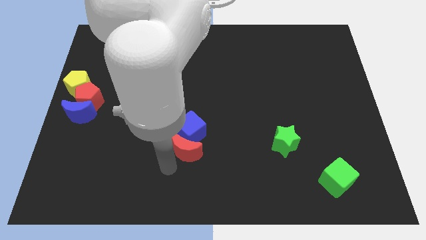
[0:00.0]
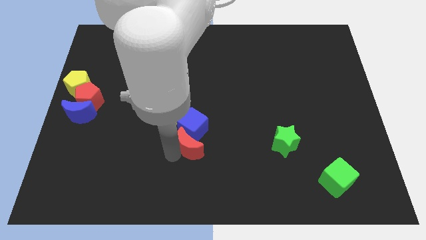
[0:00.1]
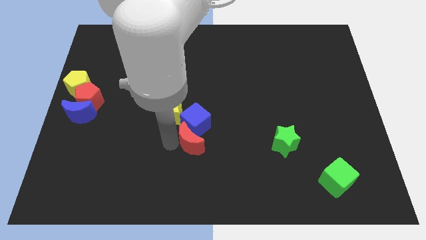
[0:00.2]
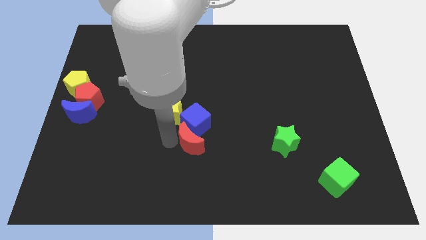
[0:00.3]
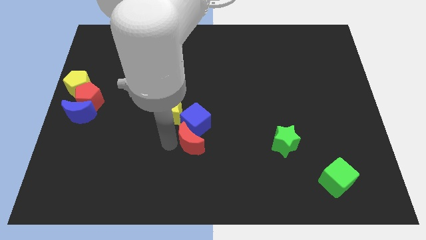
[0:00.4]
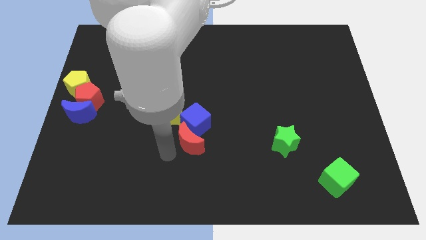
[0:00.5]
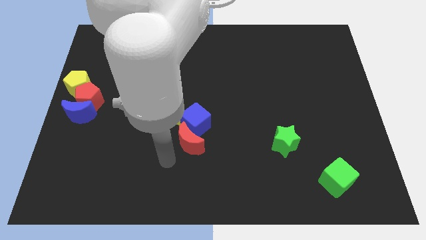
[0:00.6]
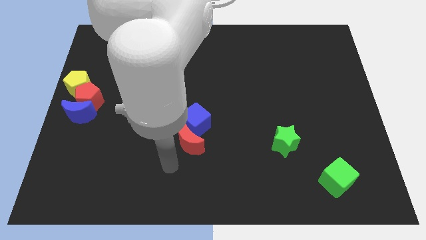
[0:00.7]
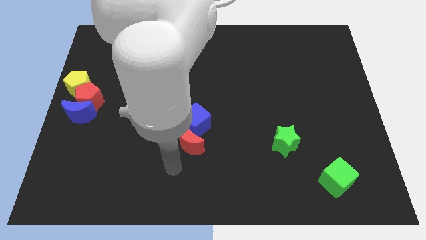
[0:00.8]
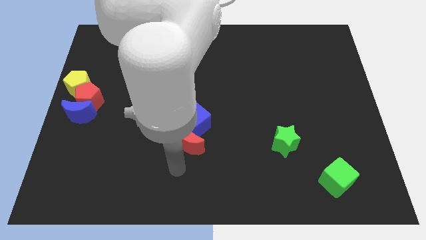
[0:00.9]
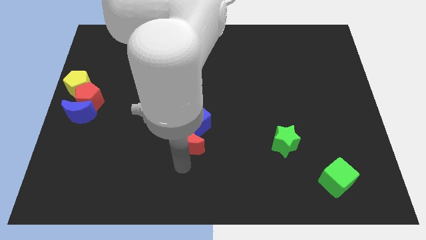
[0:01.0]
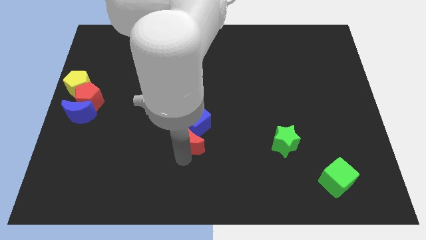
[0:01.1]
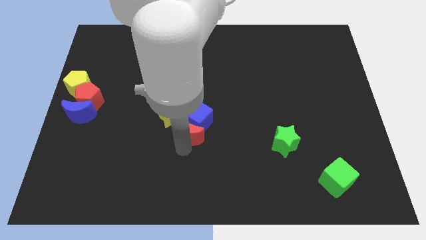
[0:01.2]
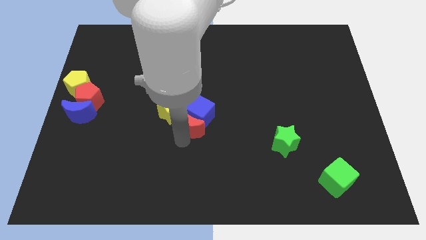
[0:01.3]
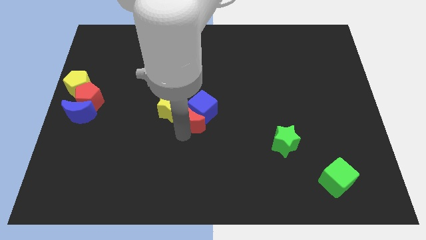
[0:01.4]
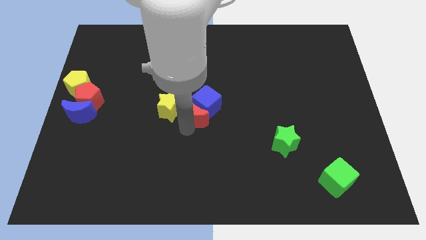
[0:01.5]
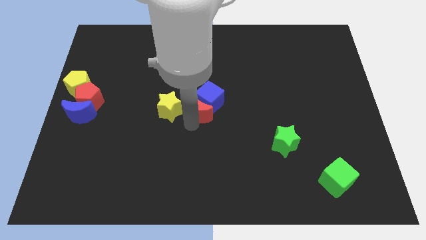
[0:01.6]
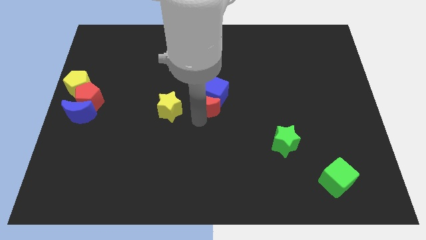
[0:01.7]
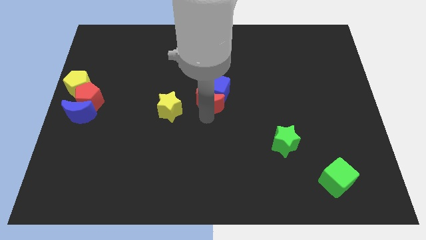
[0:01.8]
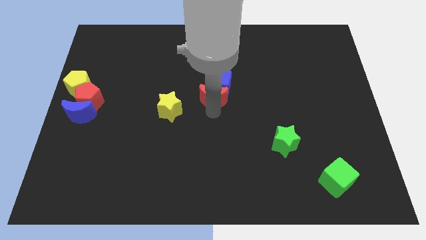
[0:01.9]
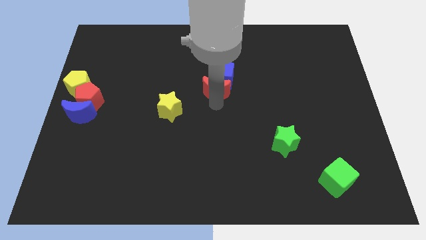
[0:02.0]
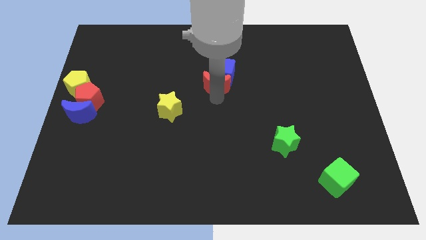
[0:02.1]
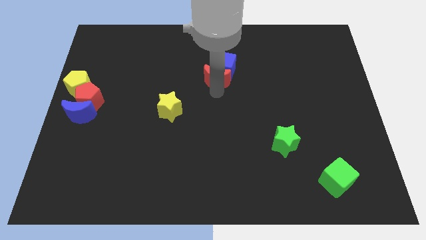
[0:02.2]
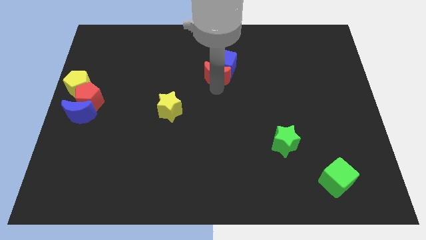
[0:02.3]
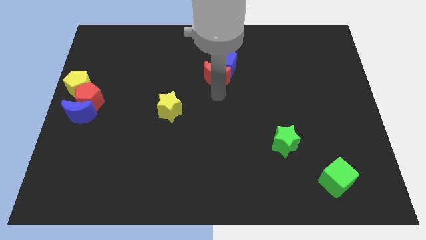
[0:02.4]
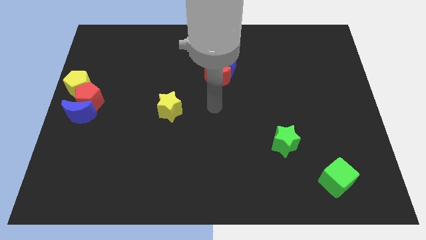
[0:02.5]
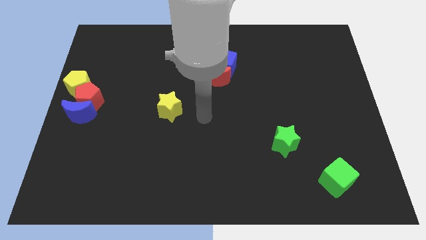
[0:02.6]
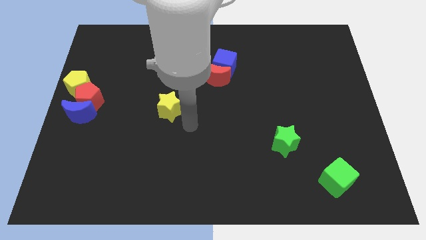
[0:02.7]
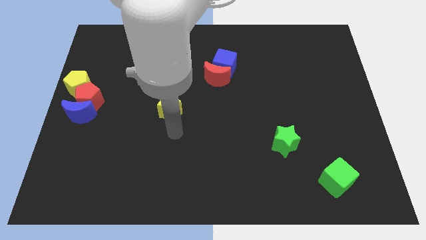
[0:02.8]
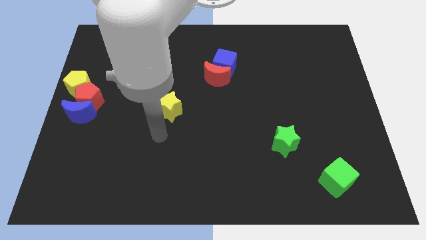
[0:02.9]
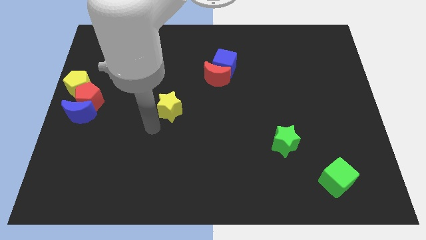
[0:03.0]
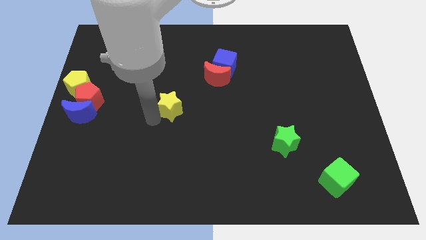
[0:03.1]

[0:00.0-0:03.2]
separate blue cube and the red moon from the yellow star

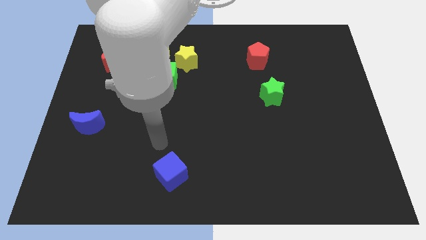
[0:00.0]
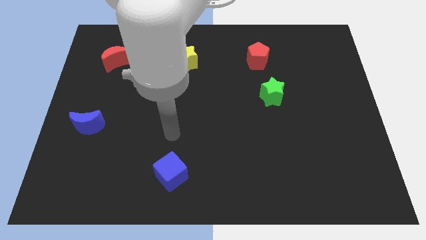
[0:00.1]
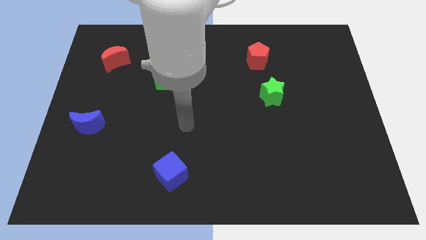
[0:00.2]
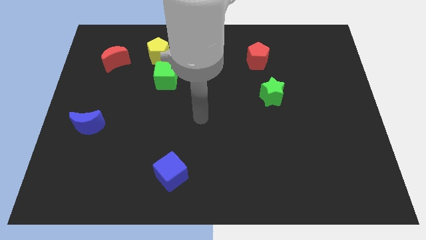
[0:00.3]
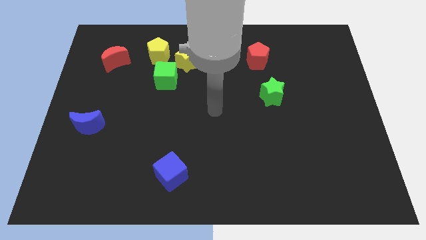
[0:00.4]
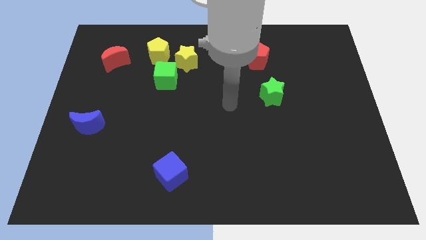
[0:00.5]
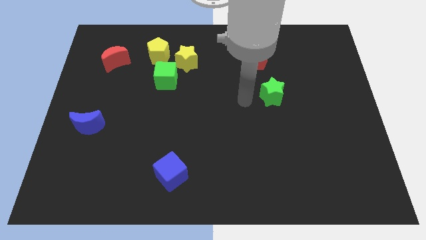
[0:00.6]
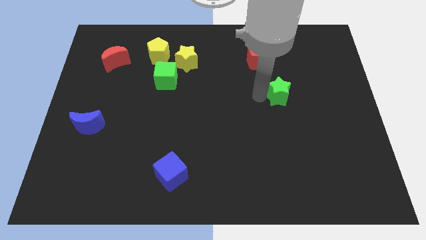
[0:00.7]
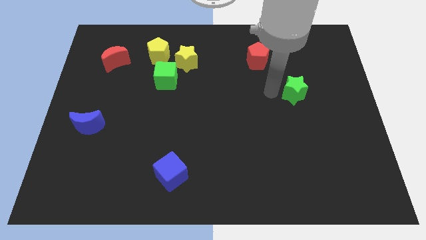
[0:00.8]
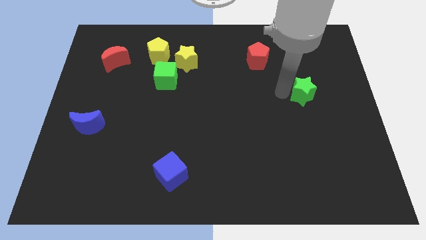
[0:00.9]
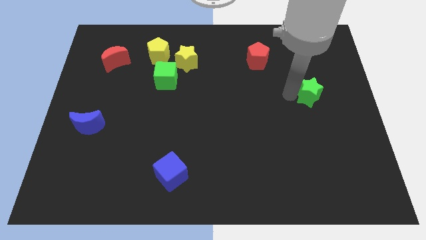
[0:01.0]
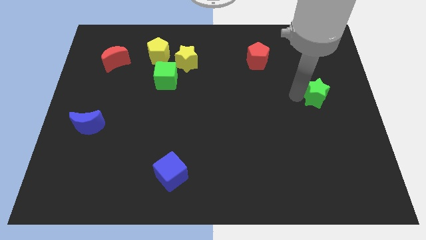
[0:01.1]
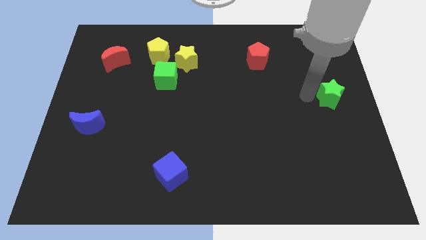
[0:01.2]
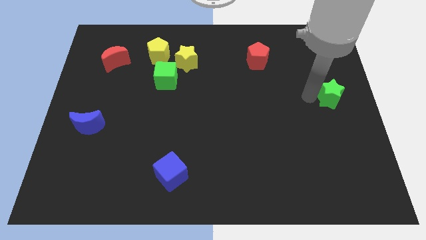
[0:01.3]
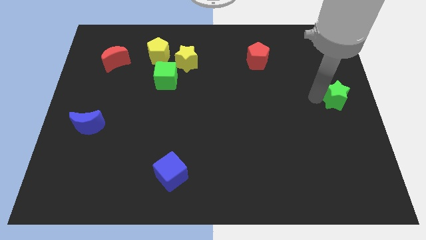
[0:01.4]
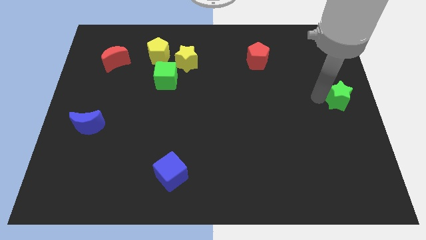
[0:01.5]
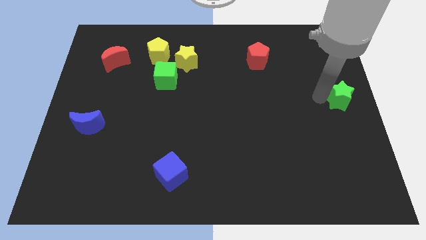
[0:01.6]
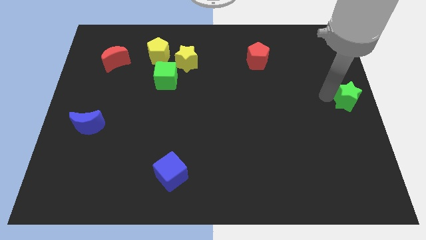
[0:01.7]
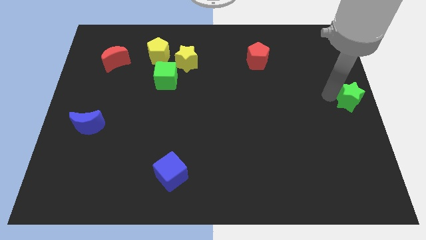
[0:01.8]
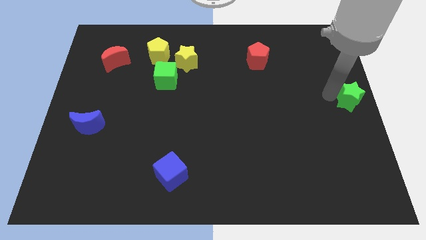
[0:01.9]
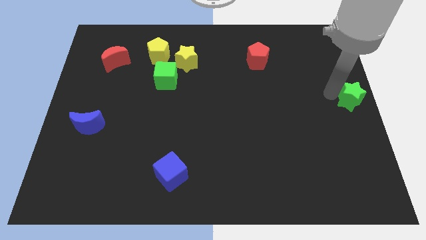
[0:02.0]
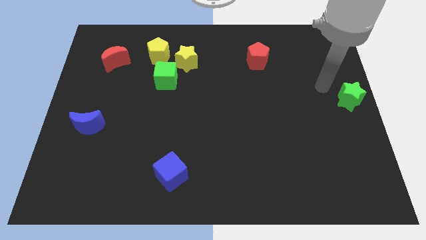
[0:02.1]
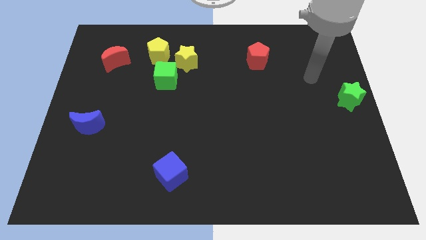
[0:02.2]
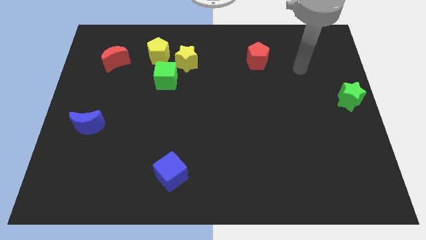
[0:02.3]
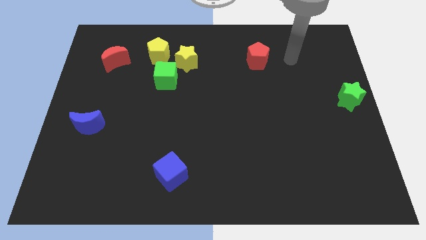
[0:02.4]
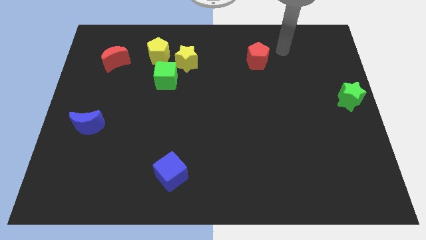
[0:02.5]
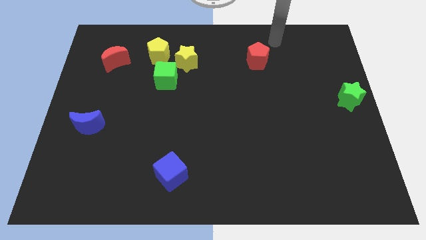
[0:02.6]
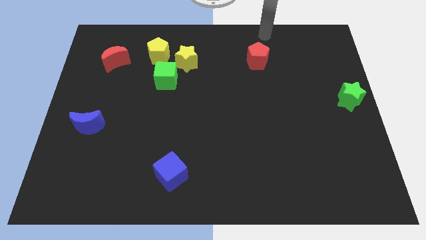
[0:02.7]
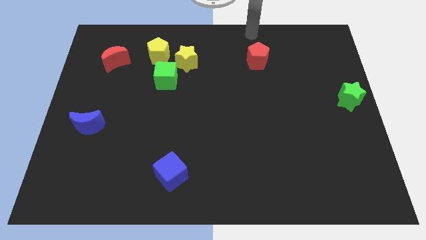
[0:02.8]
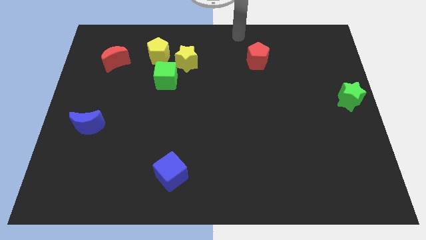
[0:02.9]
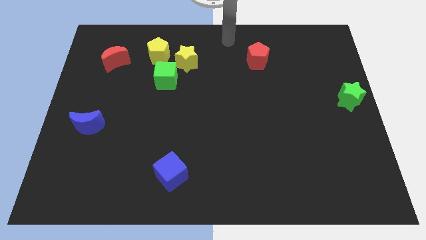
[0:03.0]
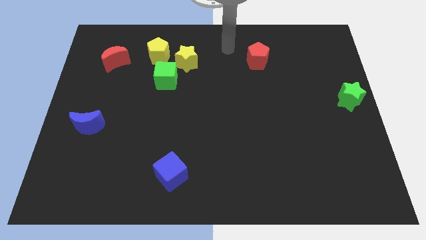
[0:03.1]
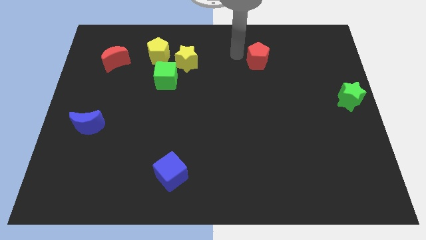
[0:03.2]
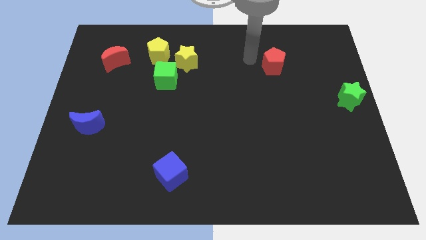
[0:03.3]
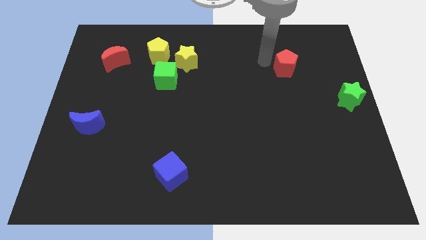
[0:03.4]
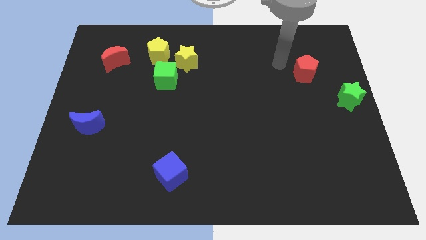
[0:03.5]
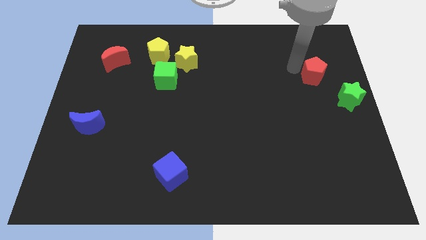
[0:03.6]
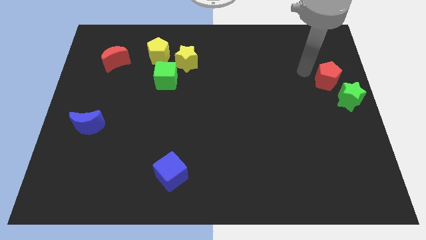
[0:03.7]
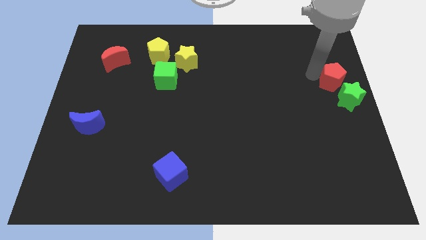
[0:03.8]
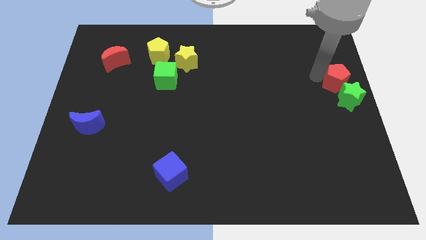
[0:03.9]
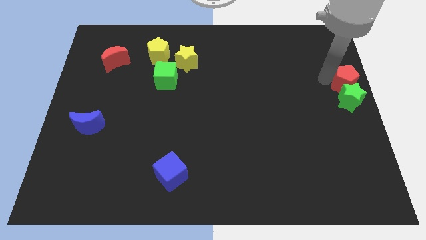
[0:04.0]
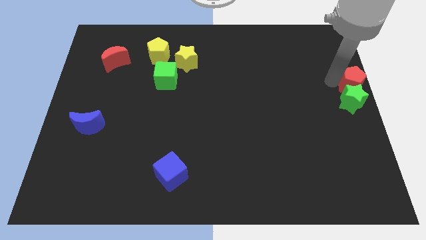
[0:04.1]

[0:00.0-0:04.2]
move the green star and red pentagon to the center right of the board

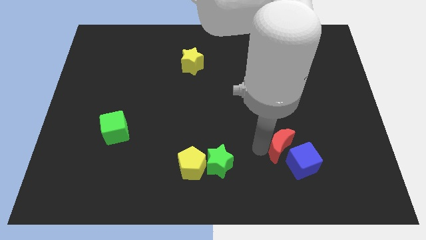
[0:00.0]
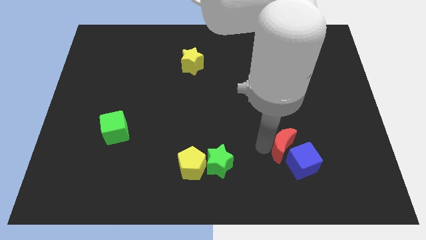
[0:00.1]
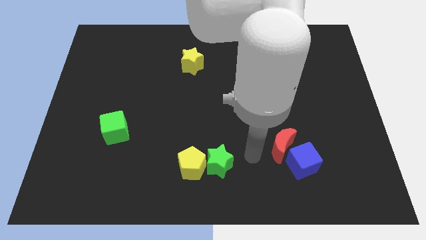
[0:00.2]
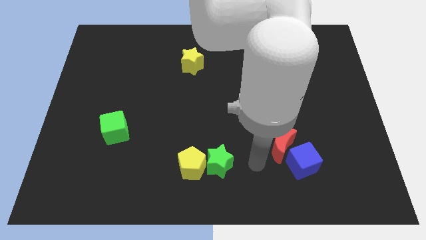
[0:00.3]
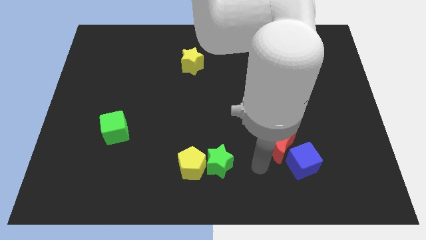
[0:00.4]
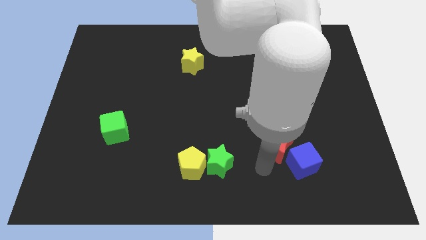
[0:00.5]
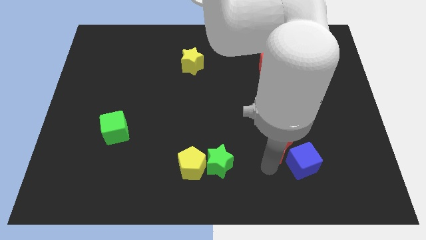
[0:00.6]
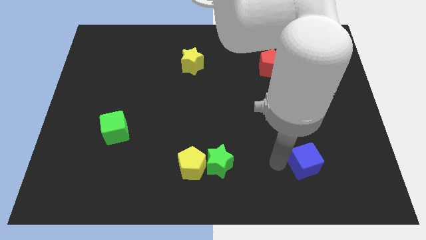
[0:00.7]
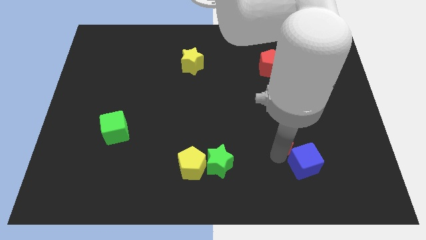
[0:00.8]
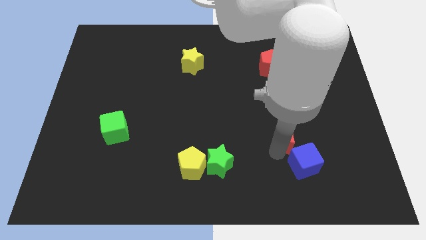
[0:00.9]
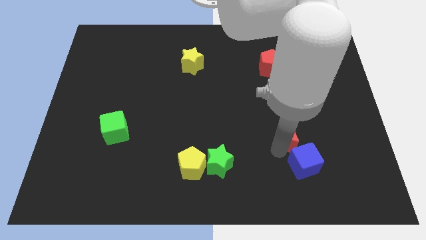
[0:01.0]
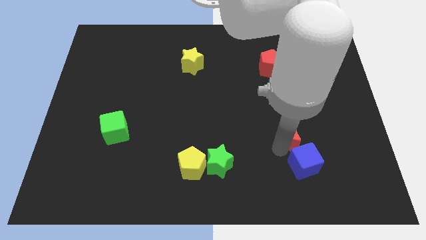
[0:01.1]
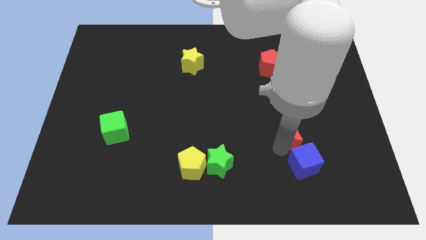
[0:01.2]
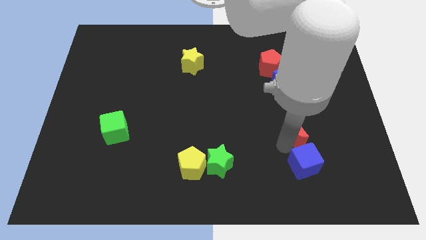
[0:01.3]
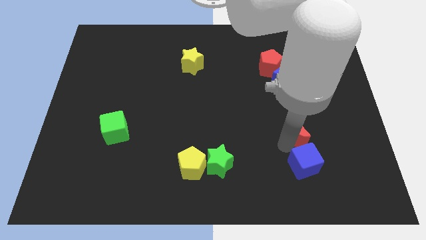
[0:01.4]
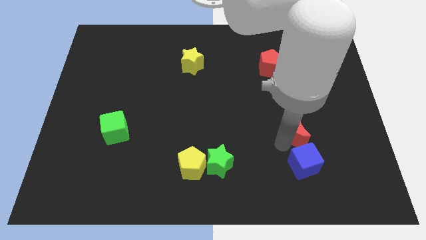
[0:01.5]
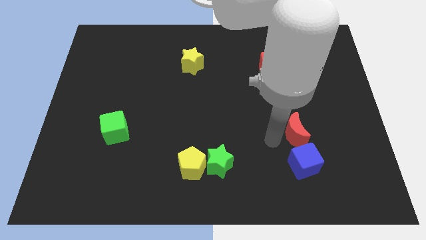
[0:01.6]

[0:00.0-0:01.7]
push the red crescent to the top side of the blue cube
